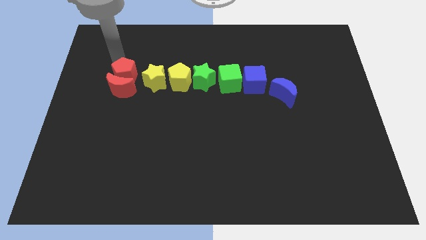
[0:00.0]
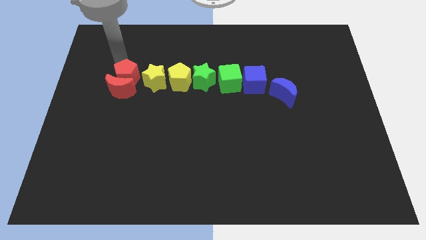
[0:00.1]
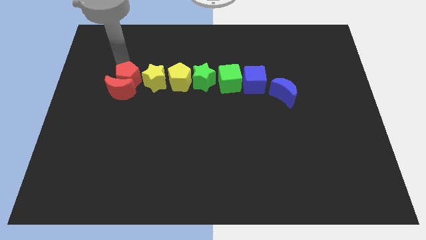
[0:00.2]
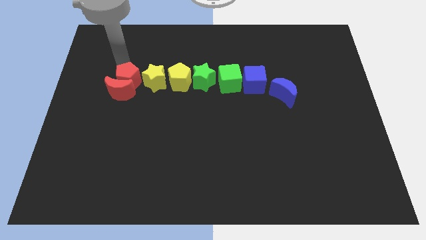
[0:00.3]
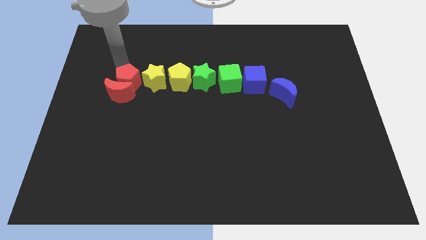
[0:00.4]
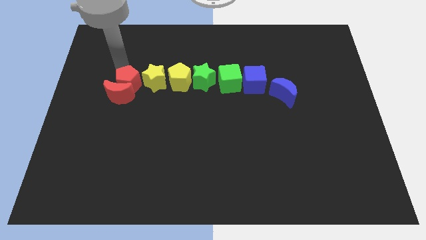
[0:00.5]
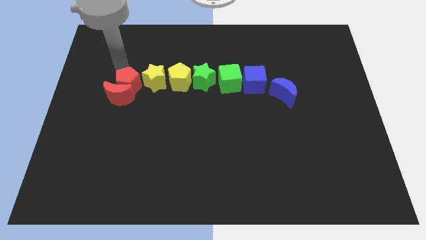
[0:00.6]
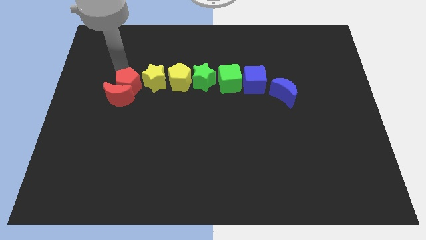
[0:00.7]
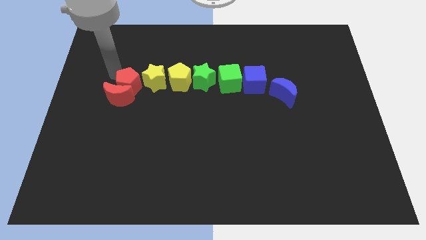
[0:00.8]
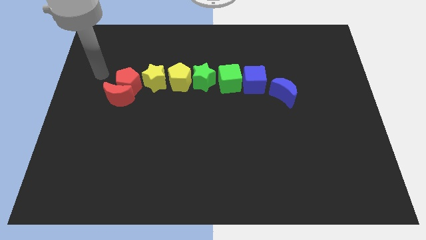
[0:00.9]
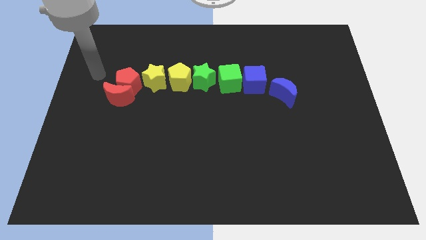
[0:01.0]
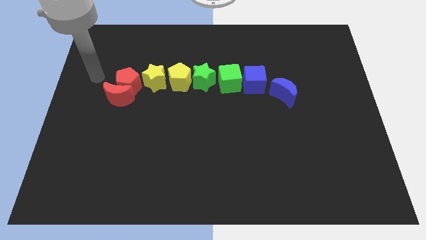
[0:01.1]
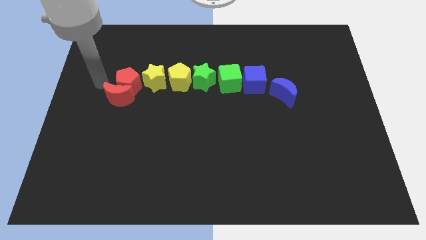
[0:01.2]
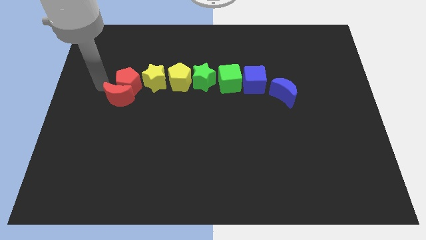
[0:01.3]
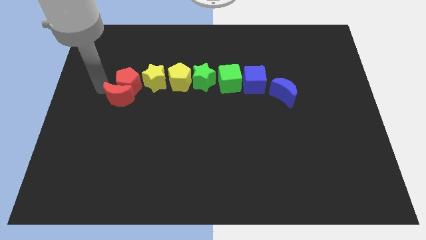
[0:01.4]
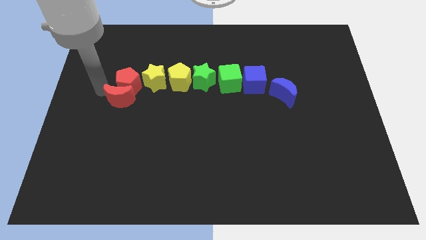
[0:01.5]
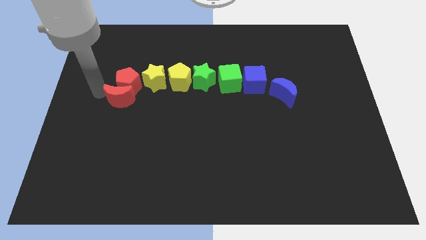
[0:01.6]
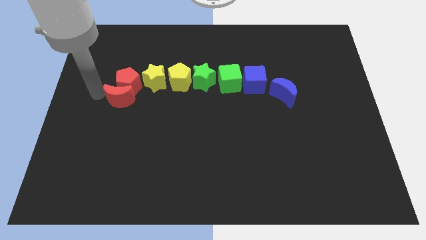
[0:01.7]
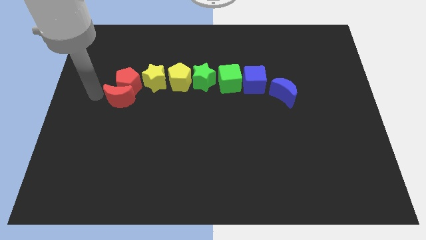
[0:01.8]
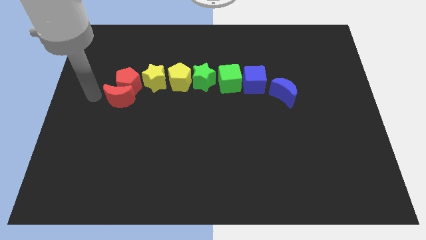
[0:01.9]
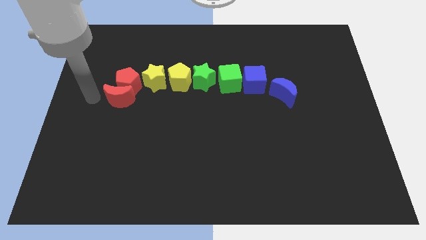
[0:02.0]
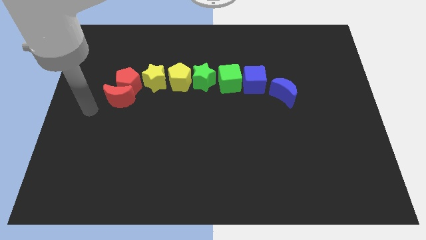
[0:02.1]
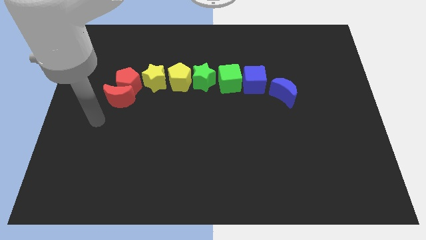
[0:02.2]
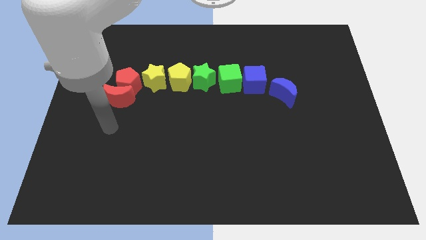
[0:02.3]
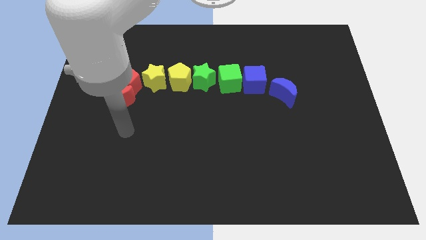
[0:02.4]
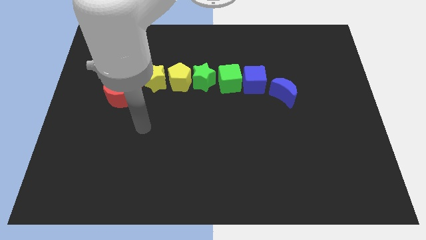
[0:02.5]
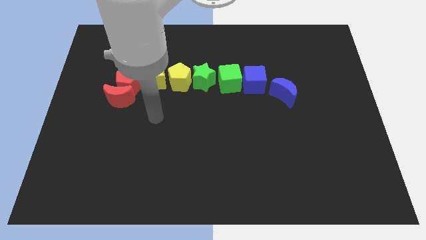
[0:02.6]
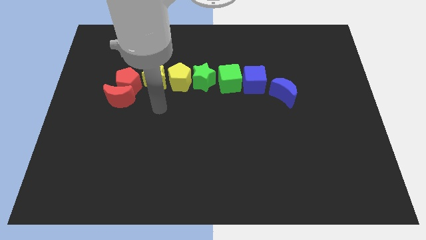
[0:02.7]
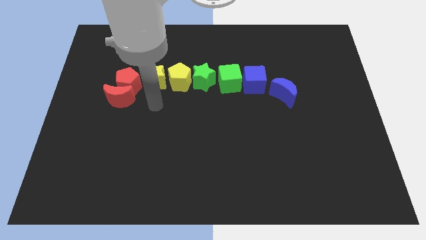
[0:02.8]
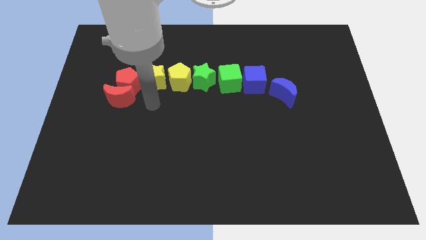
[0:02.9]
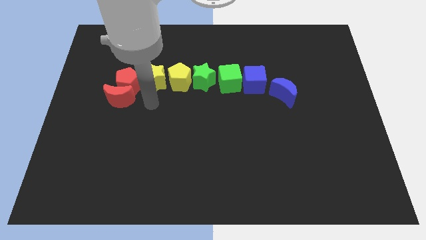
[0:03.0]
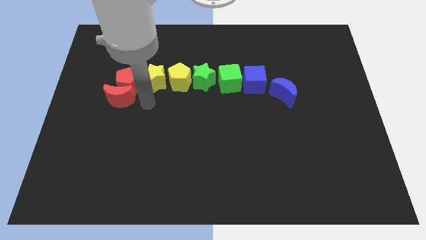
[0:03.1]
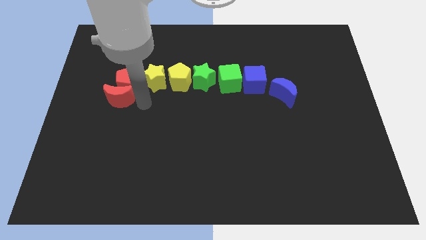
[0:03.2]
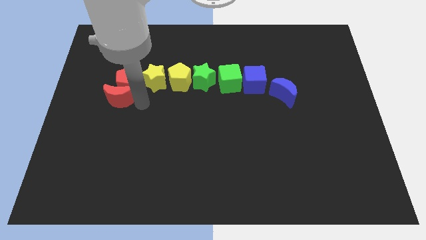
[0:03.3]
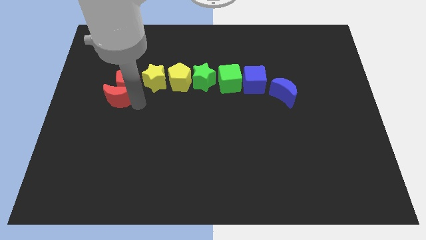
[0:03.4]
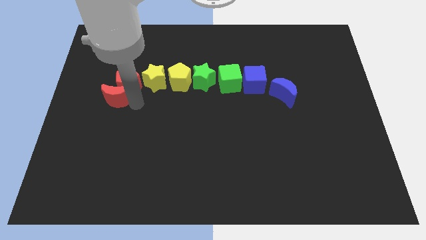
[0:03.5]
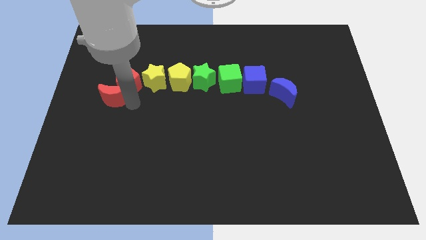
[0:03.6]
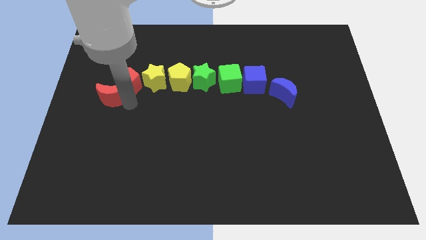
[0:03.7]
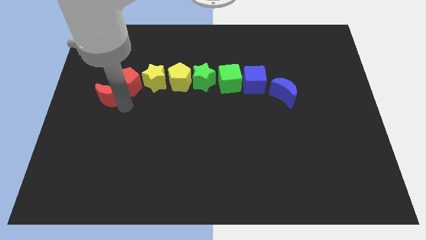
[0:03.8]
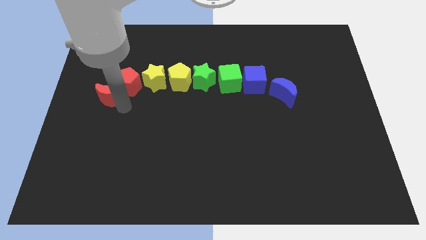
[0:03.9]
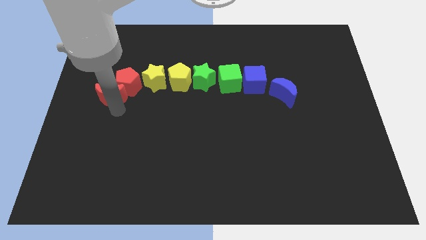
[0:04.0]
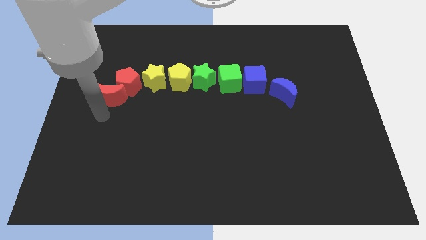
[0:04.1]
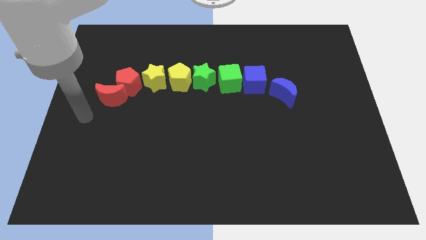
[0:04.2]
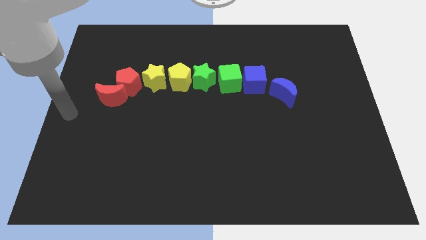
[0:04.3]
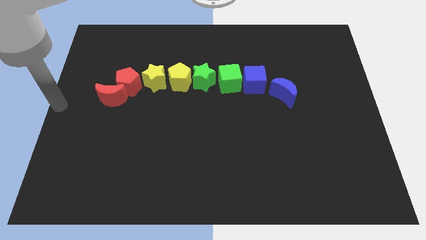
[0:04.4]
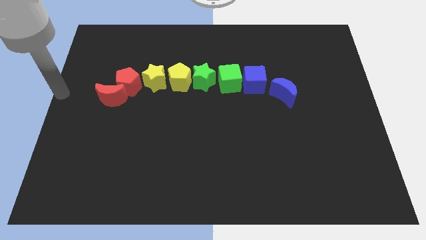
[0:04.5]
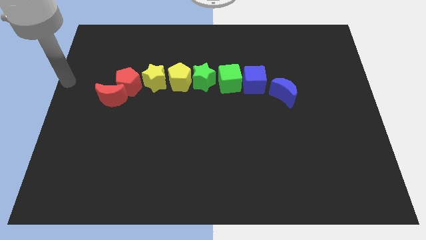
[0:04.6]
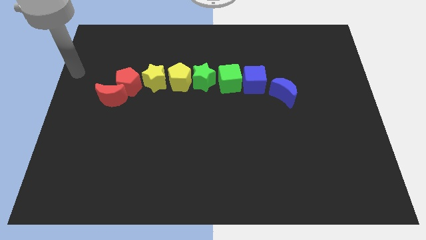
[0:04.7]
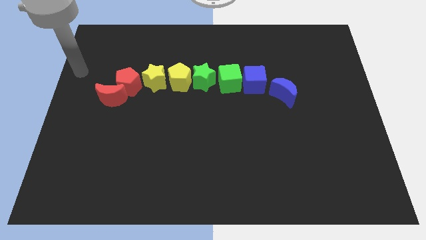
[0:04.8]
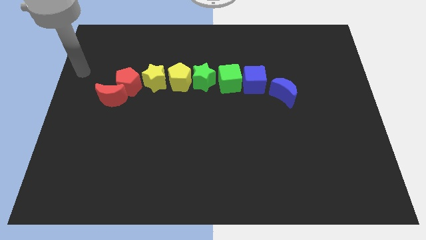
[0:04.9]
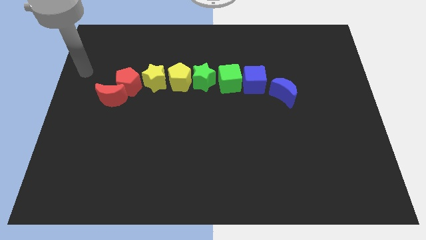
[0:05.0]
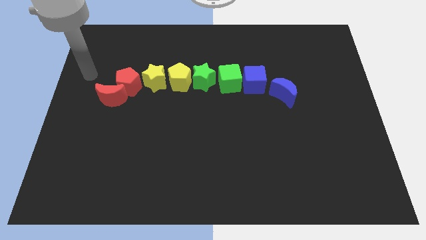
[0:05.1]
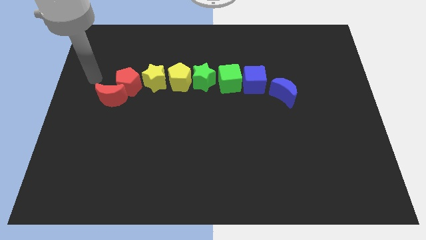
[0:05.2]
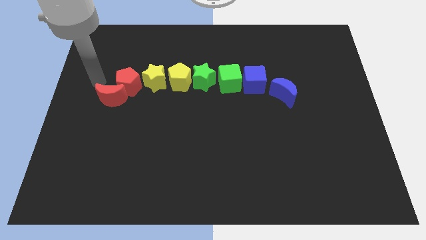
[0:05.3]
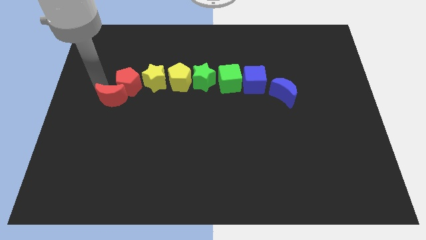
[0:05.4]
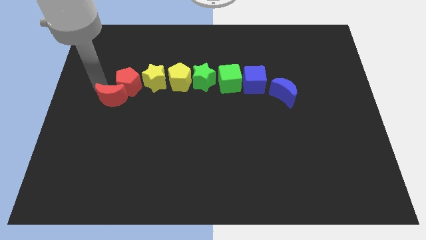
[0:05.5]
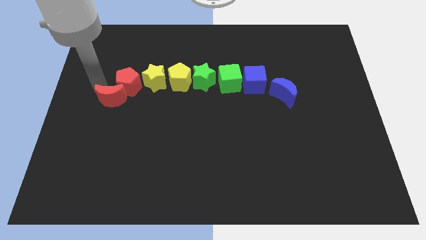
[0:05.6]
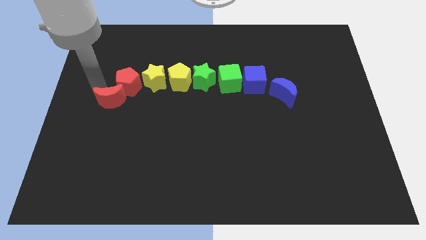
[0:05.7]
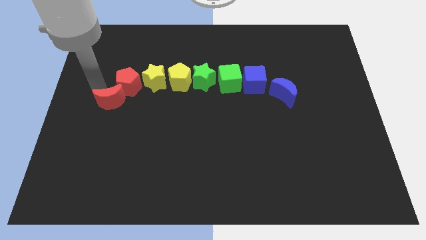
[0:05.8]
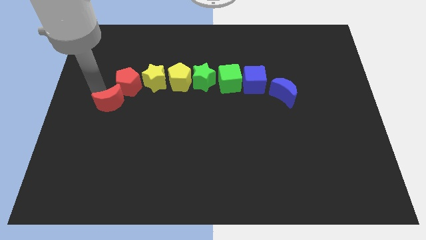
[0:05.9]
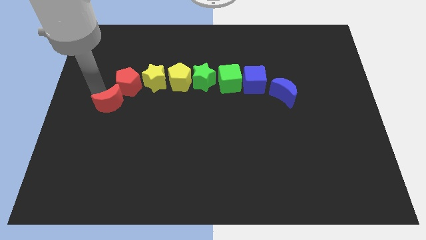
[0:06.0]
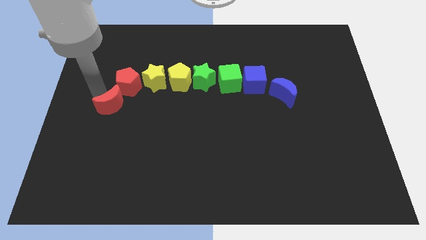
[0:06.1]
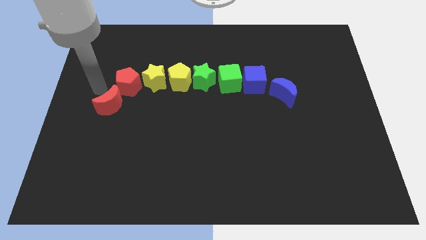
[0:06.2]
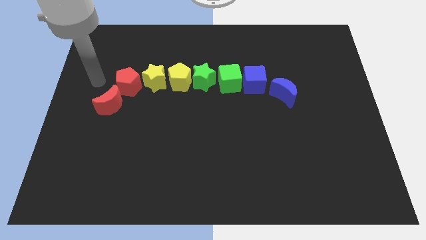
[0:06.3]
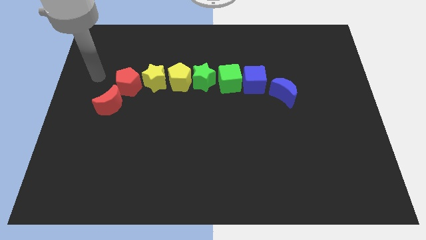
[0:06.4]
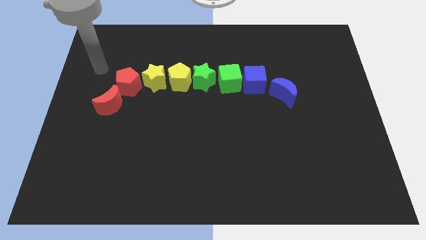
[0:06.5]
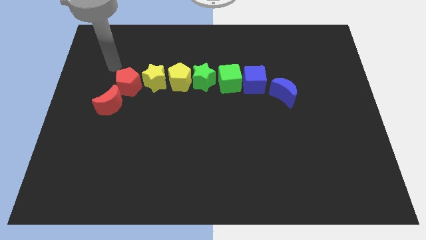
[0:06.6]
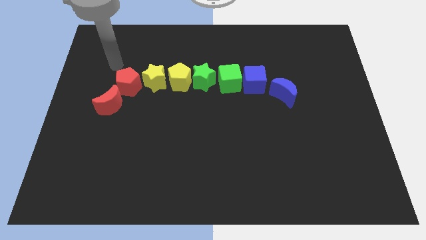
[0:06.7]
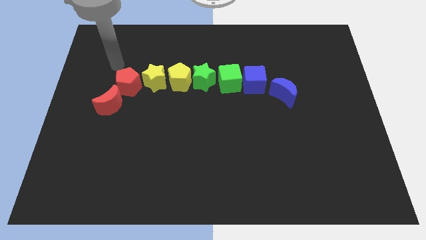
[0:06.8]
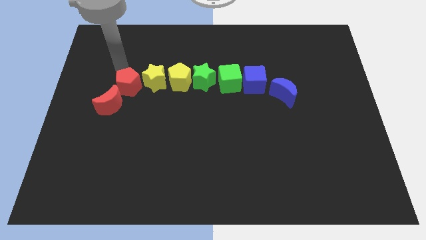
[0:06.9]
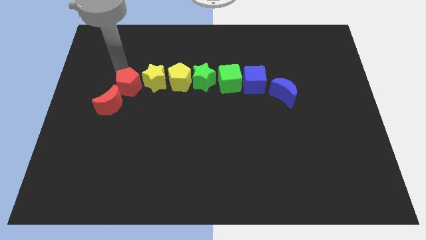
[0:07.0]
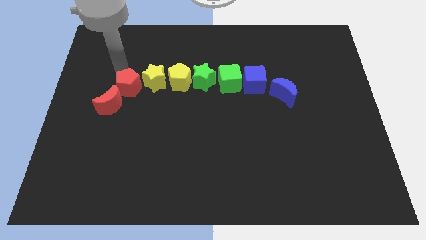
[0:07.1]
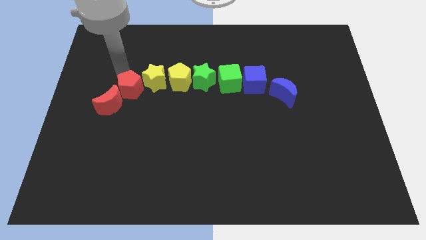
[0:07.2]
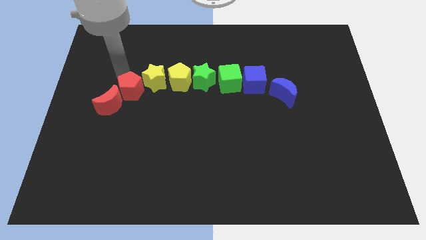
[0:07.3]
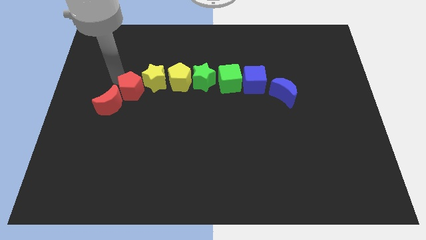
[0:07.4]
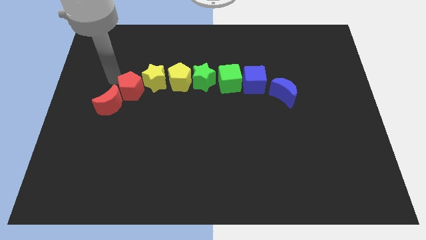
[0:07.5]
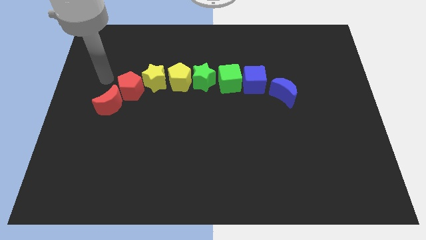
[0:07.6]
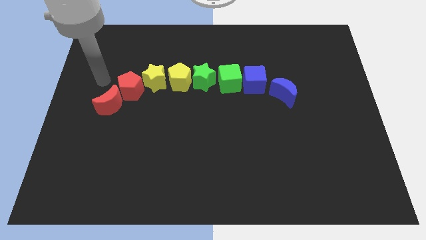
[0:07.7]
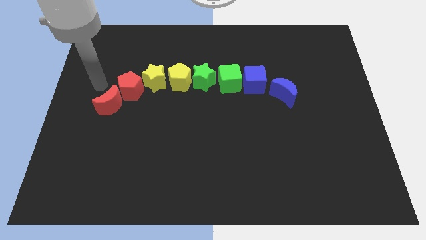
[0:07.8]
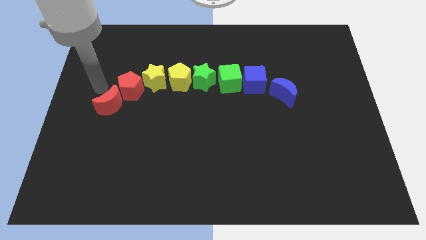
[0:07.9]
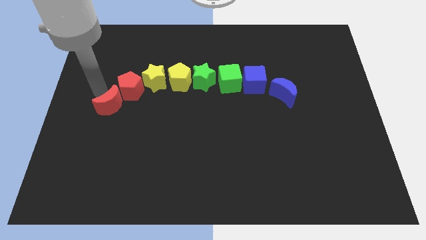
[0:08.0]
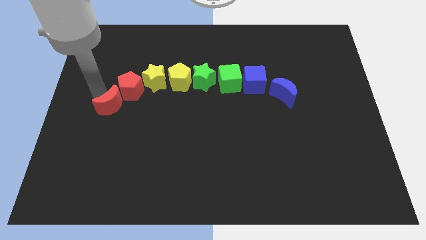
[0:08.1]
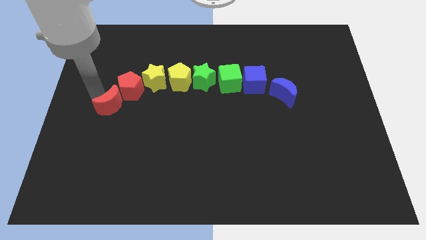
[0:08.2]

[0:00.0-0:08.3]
arrange the red blocks diagonally below the bottom left side of the yellow star

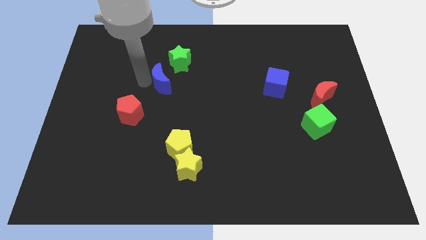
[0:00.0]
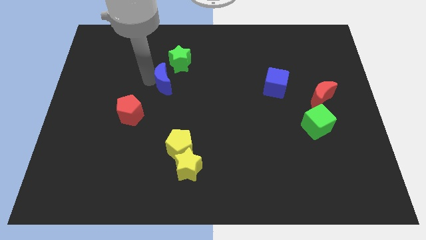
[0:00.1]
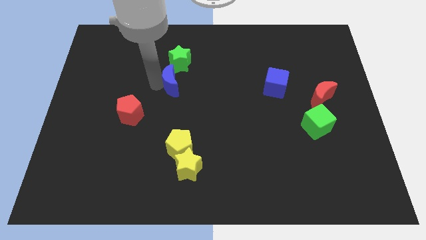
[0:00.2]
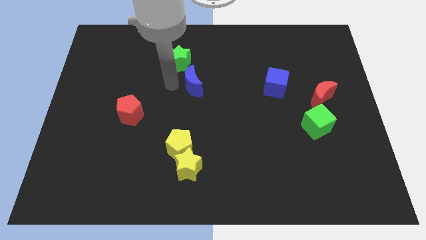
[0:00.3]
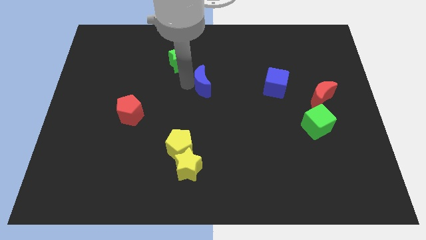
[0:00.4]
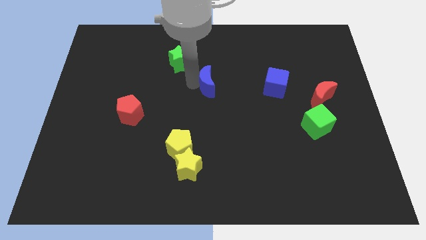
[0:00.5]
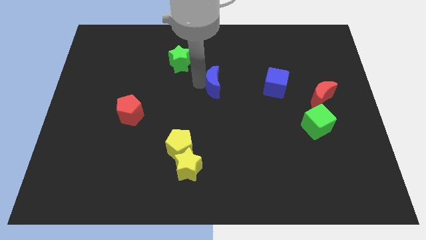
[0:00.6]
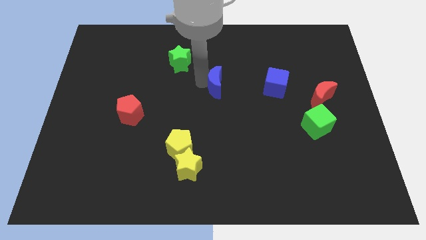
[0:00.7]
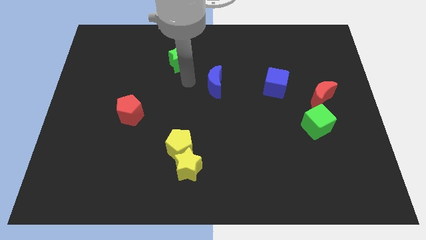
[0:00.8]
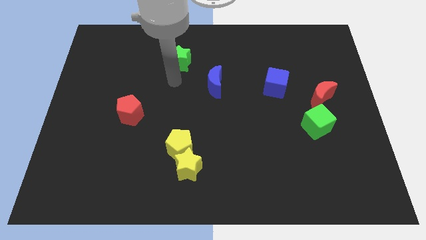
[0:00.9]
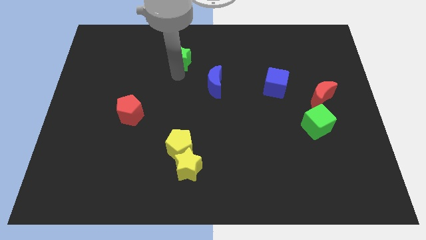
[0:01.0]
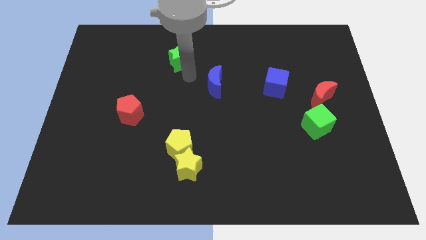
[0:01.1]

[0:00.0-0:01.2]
push blue moon to the bottom right of green star
